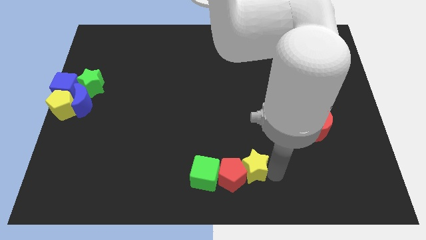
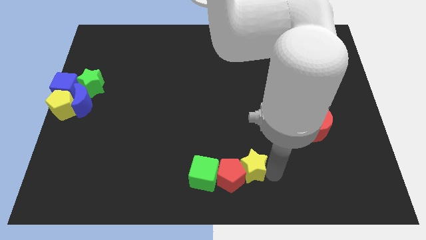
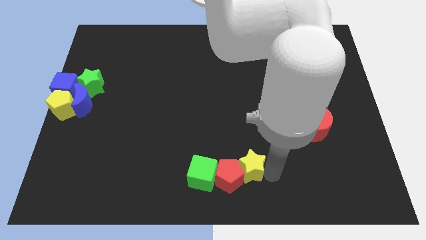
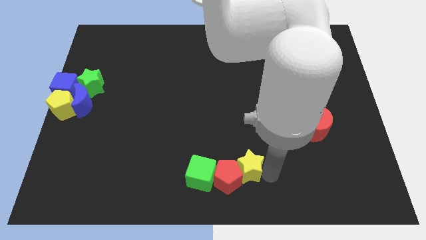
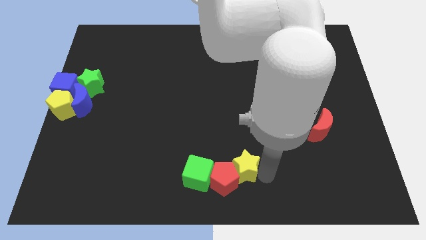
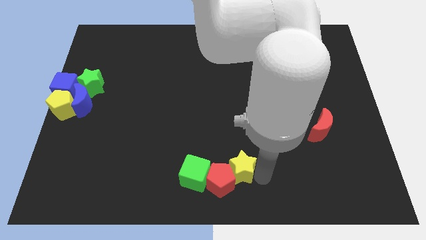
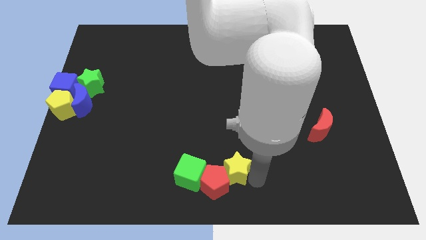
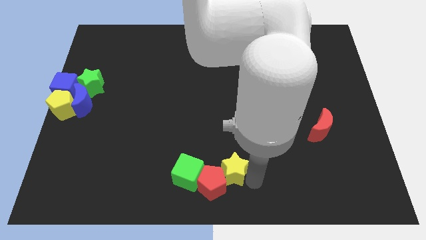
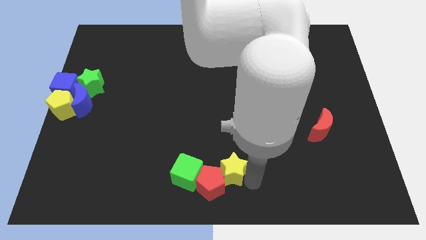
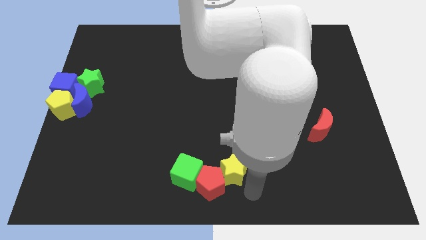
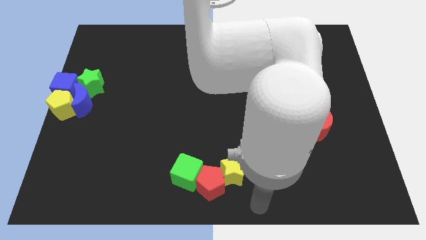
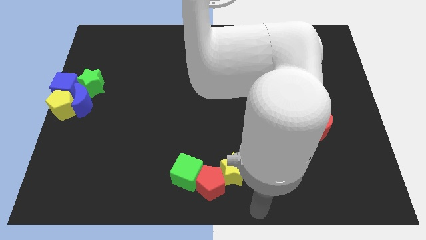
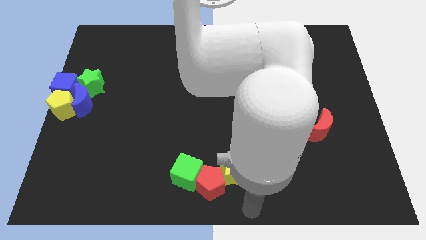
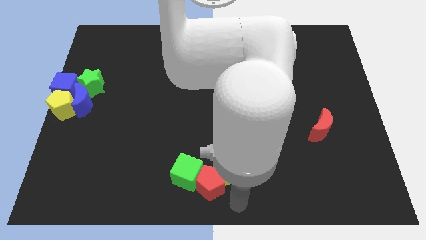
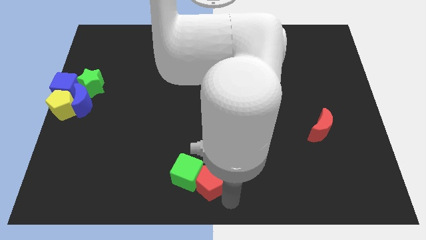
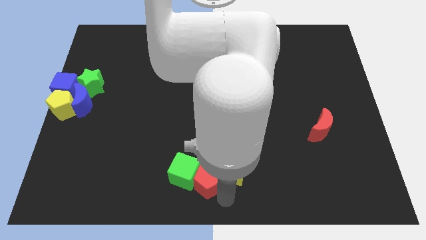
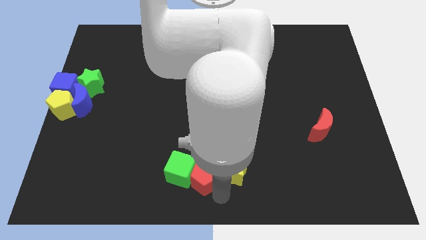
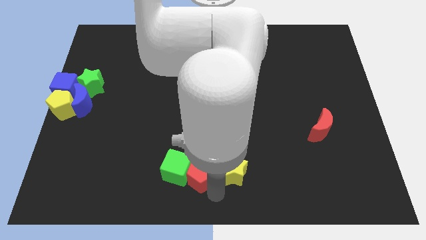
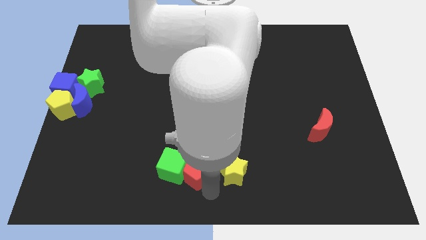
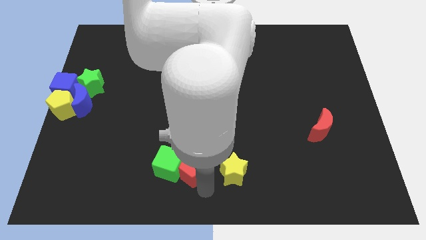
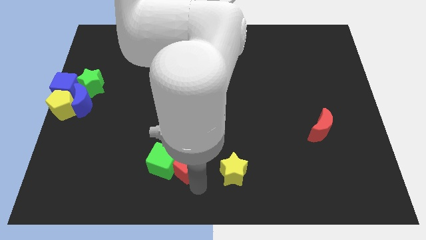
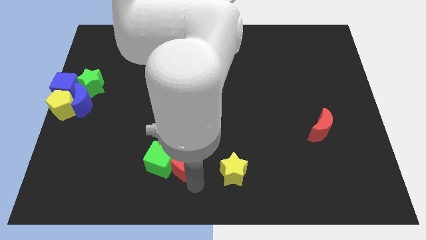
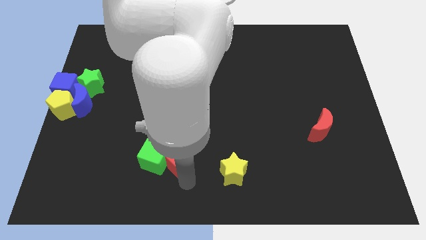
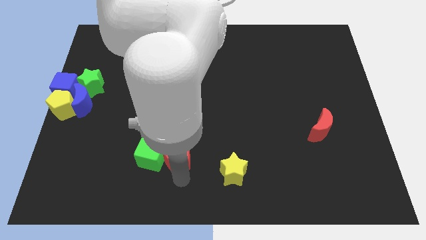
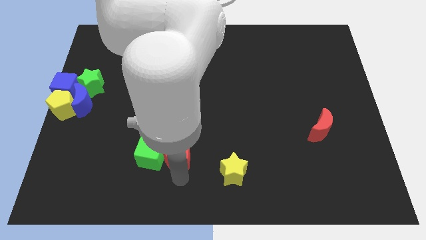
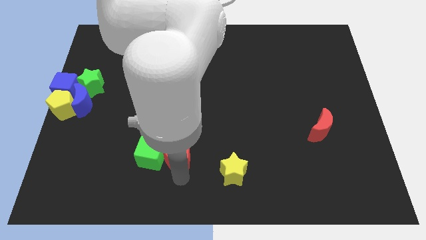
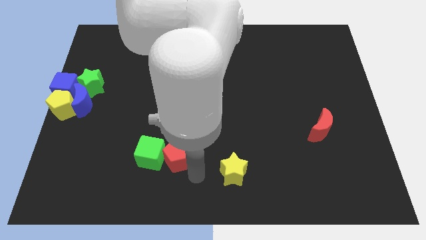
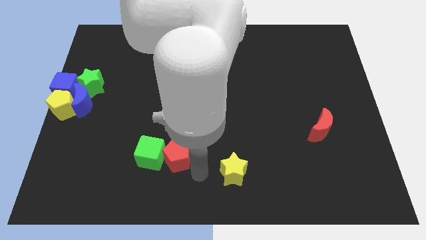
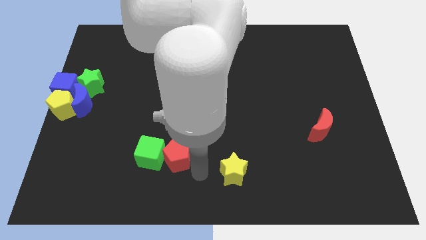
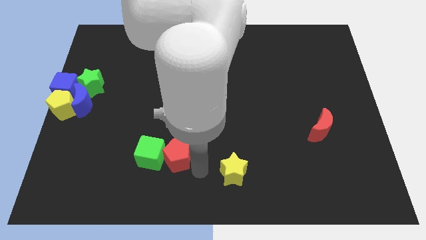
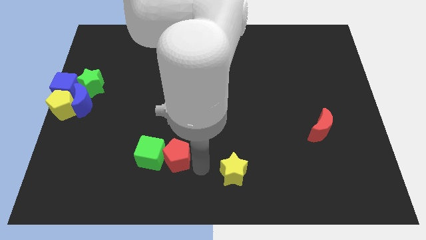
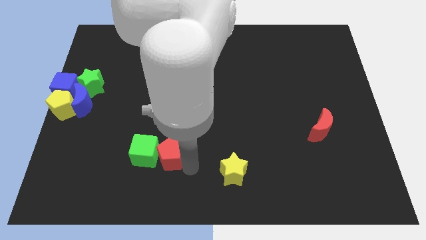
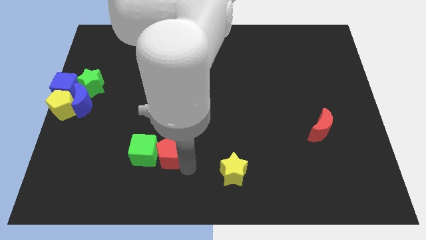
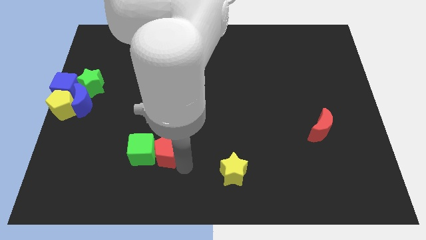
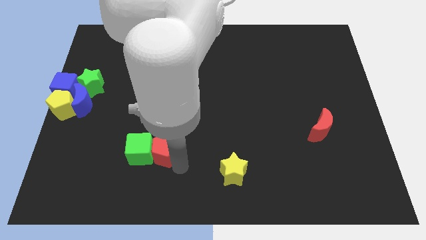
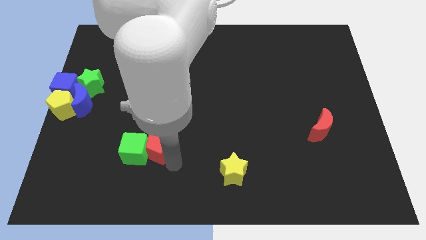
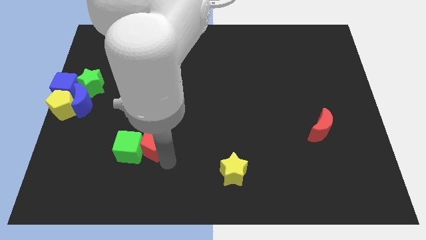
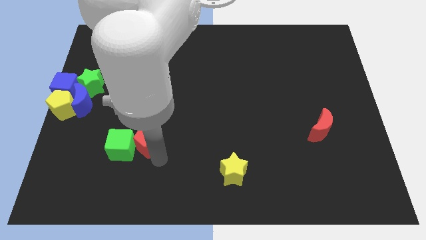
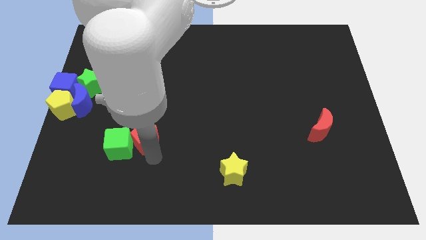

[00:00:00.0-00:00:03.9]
separate red pentagon and the green cube from the yellow star

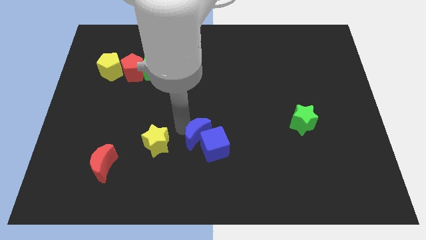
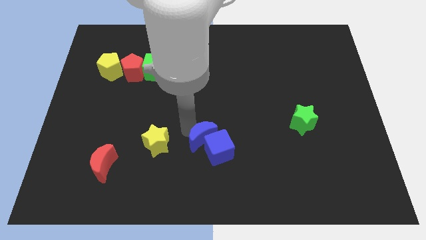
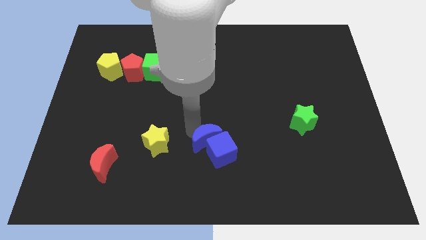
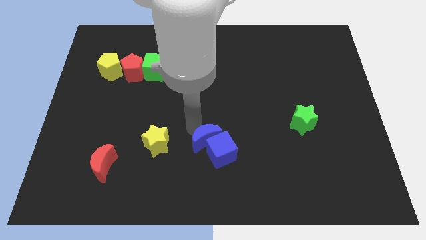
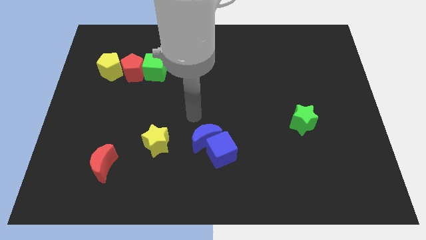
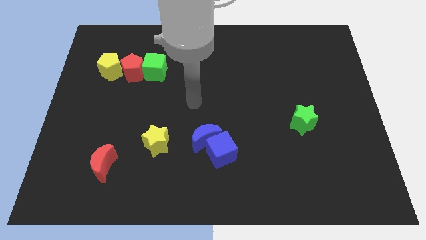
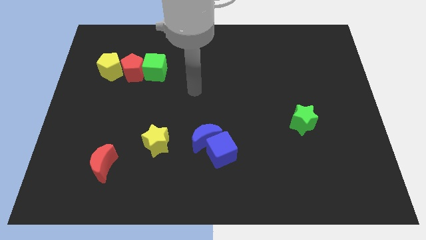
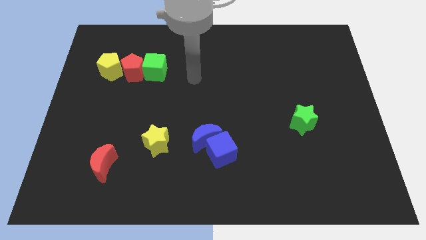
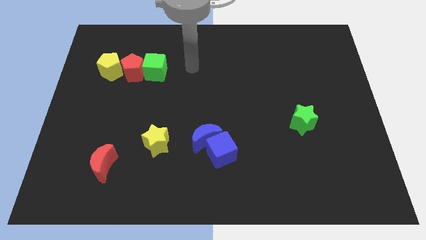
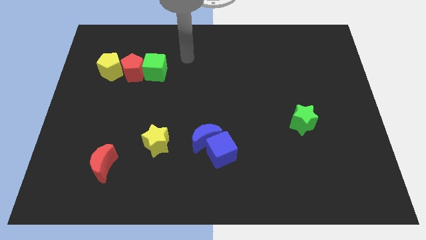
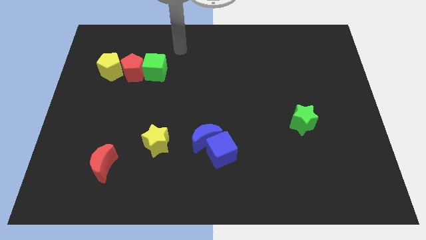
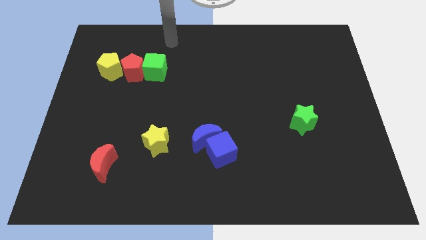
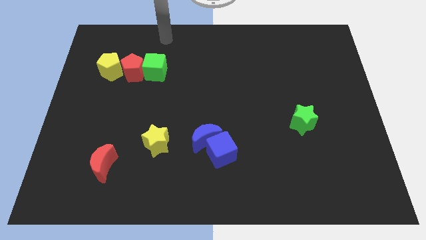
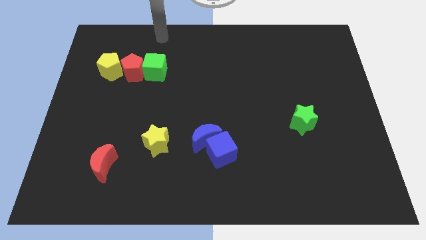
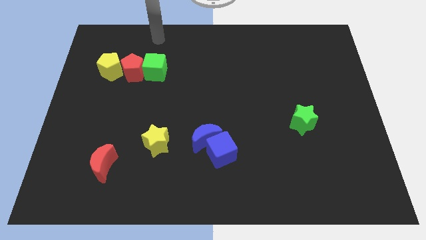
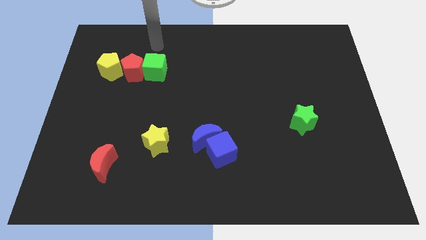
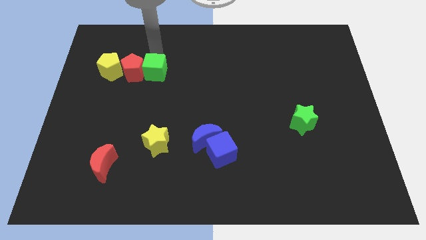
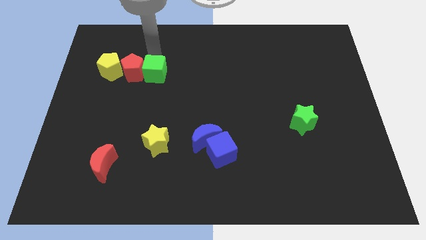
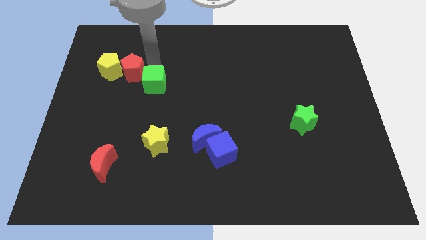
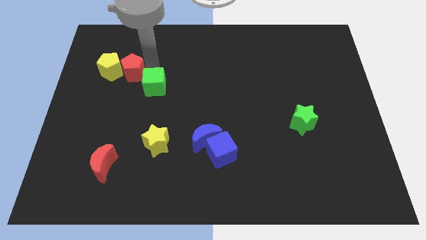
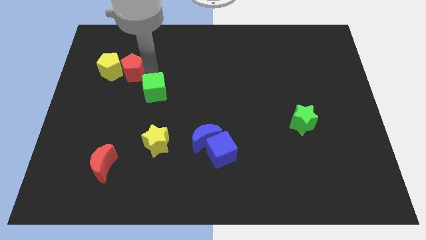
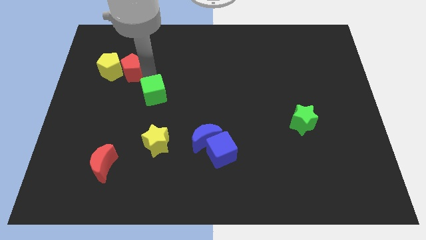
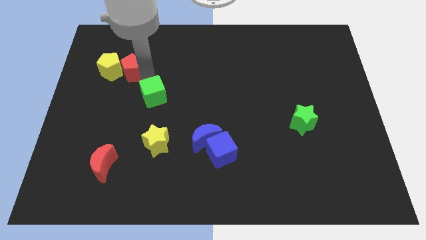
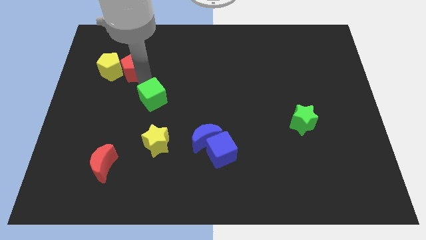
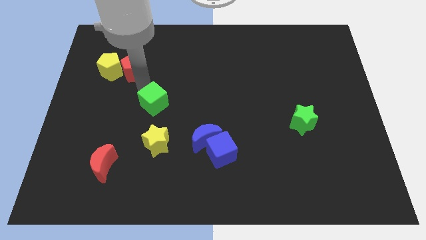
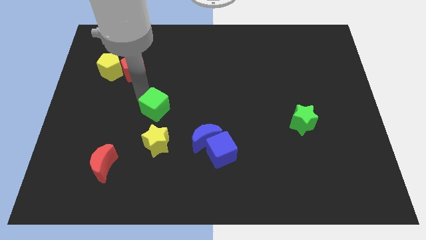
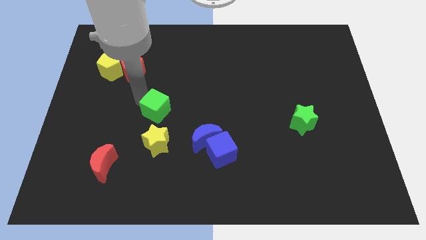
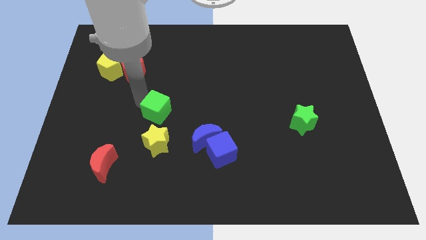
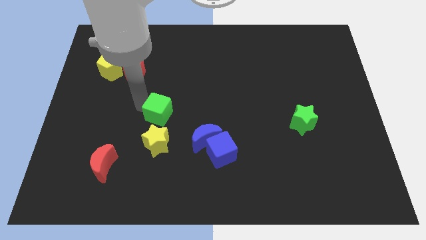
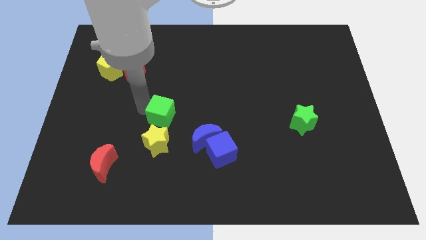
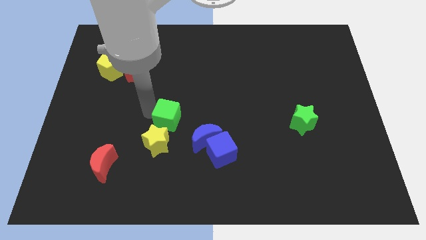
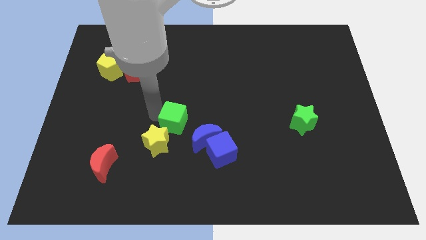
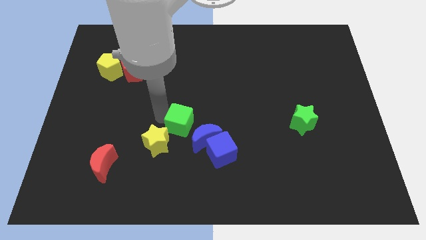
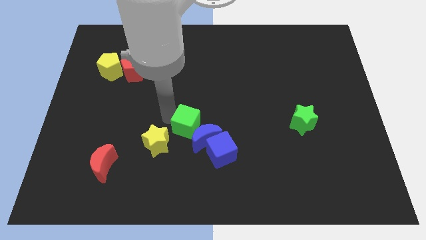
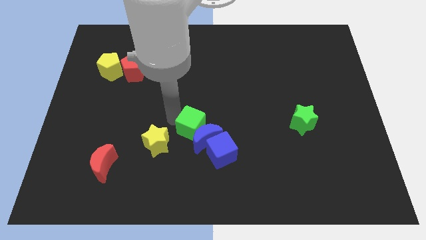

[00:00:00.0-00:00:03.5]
place the green cube diagonally top right to the yellow star

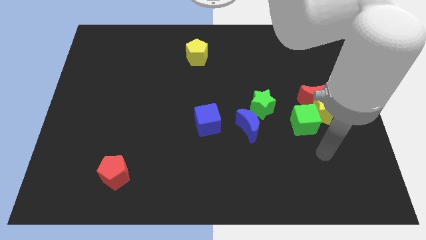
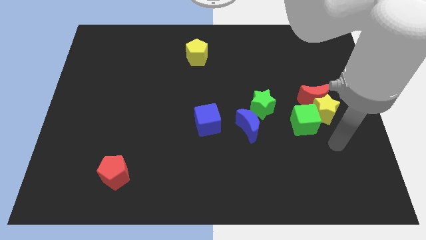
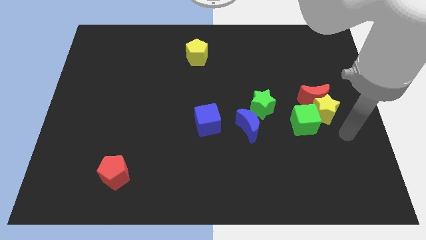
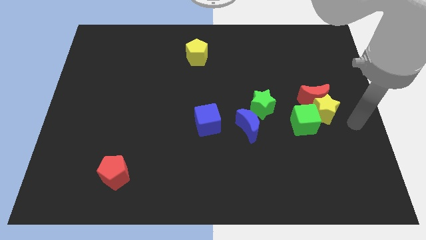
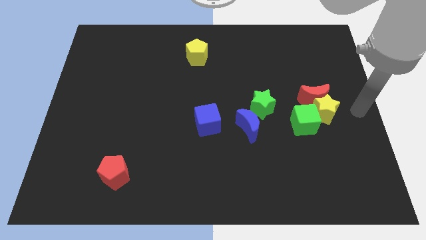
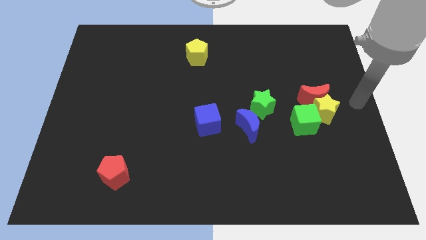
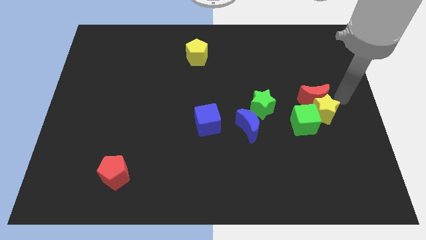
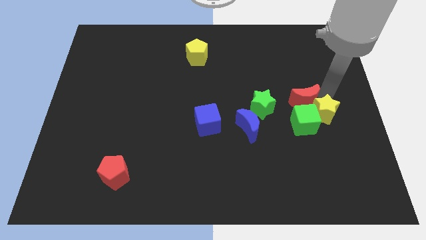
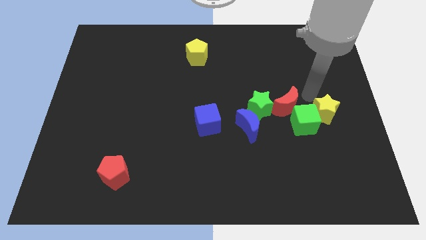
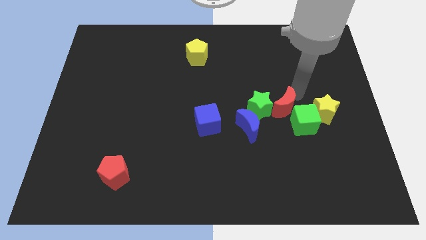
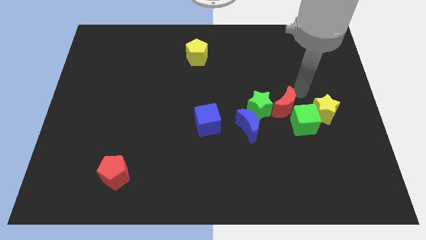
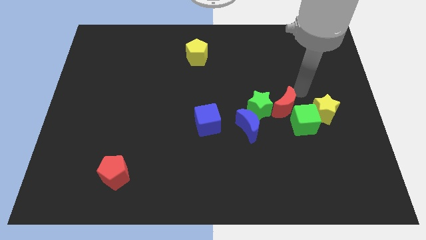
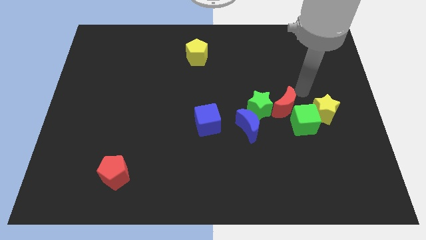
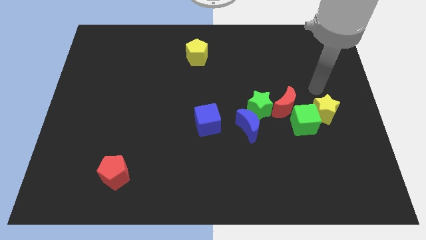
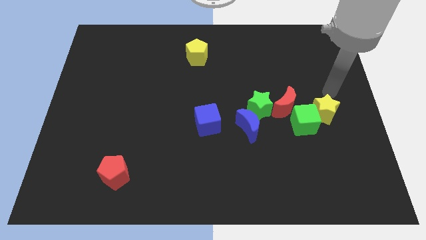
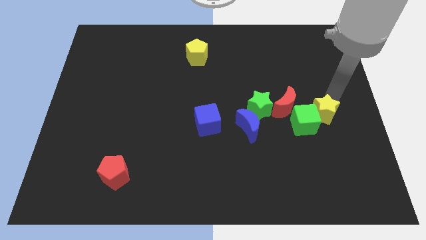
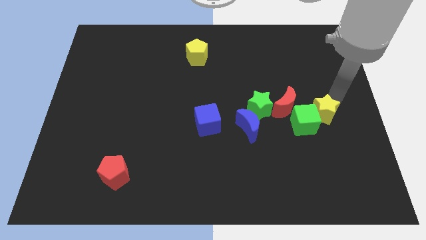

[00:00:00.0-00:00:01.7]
put the red moon and green star together
